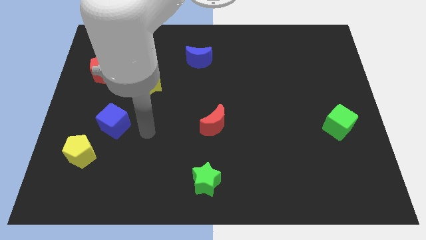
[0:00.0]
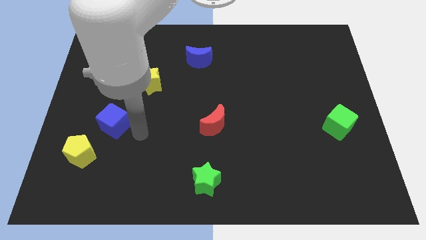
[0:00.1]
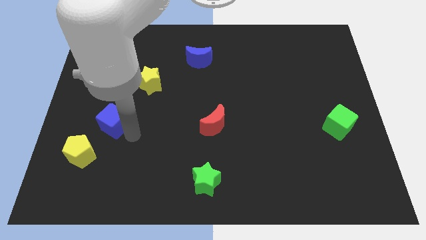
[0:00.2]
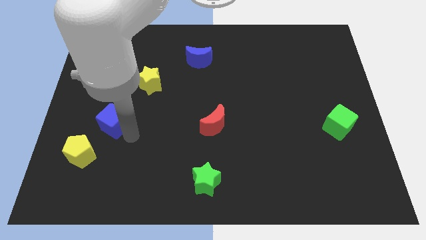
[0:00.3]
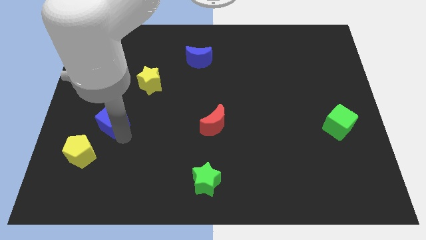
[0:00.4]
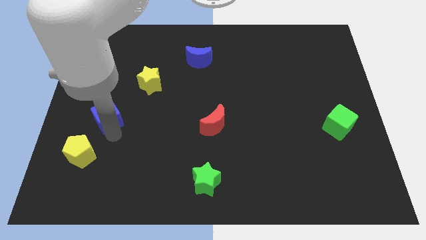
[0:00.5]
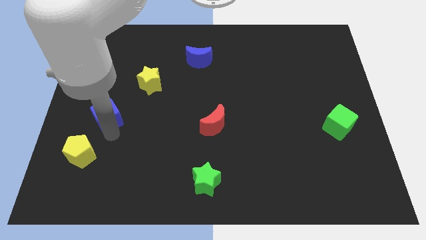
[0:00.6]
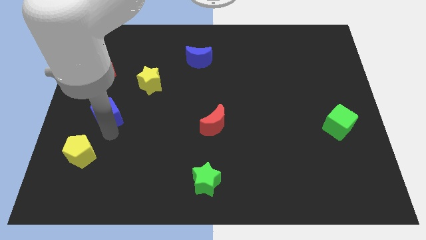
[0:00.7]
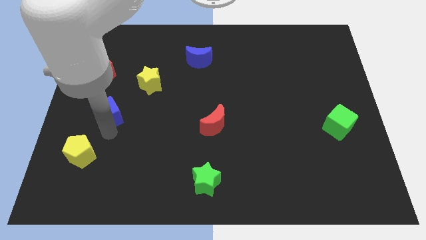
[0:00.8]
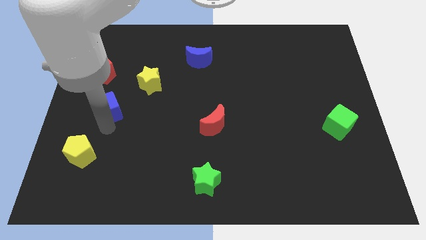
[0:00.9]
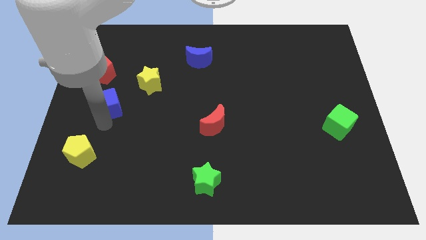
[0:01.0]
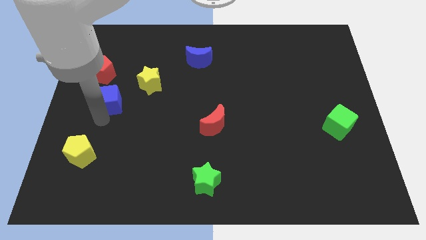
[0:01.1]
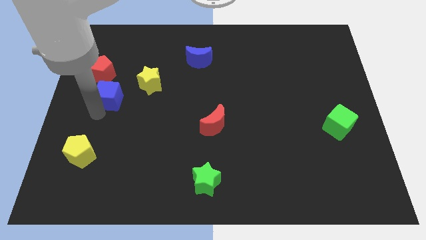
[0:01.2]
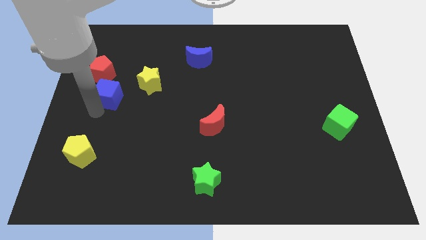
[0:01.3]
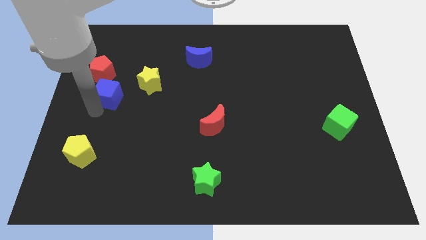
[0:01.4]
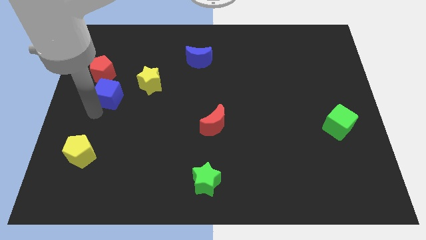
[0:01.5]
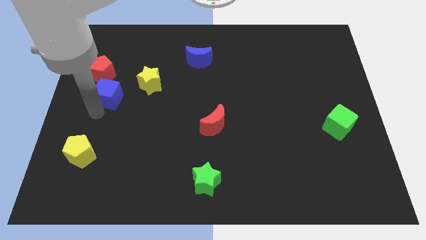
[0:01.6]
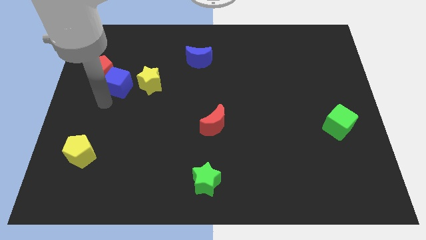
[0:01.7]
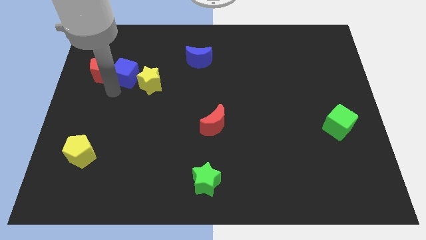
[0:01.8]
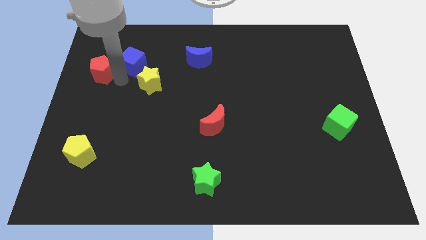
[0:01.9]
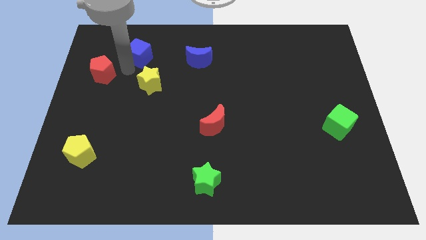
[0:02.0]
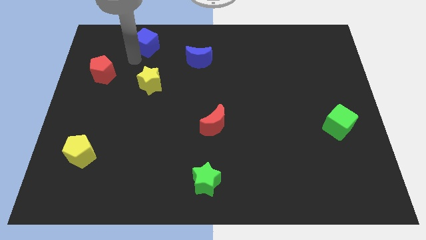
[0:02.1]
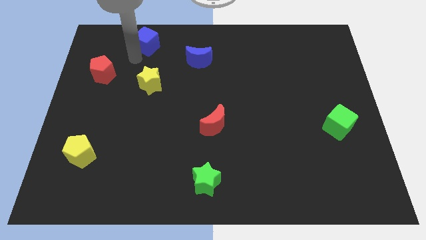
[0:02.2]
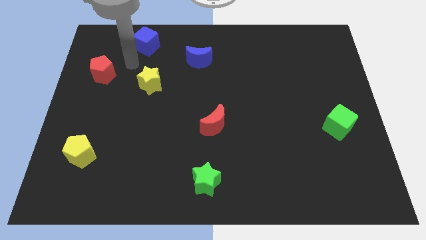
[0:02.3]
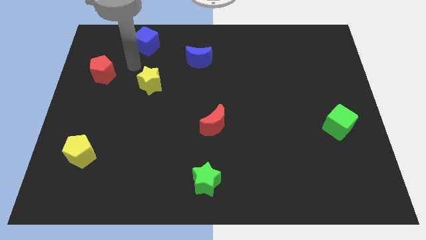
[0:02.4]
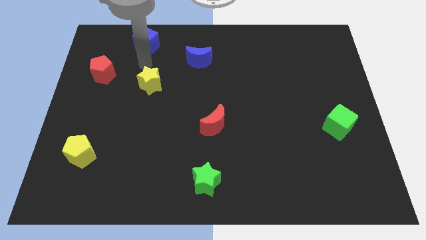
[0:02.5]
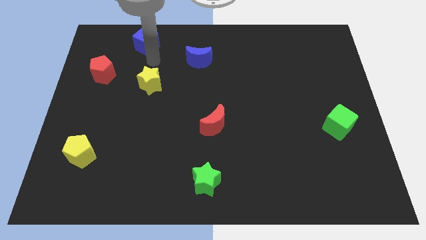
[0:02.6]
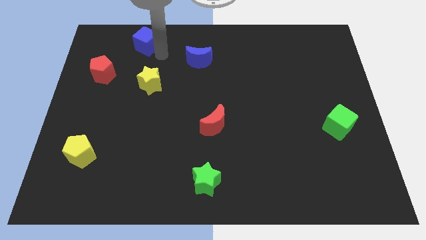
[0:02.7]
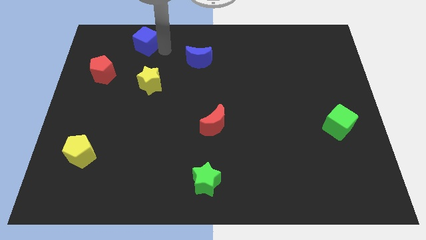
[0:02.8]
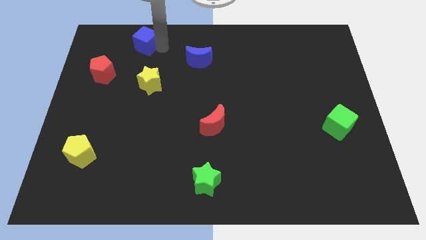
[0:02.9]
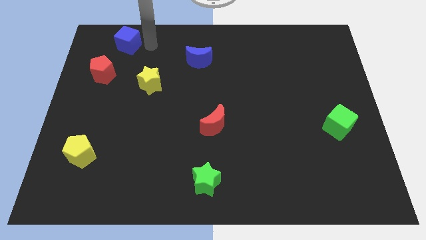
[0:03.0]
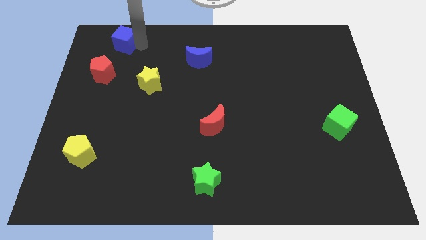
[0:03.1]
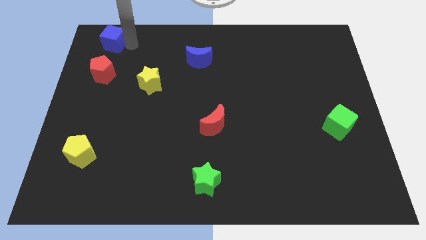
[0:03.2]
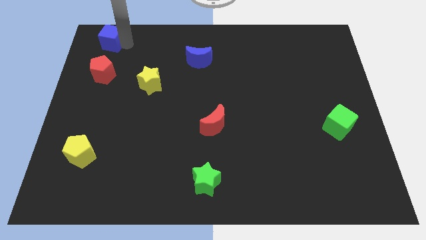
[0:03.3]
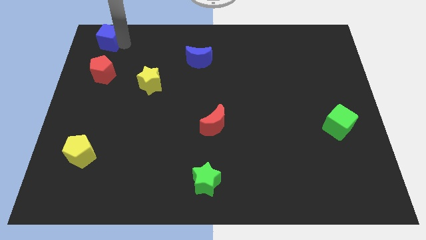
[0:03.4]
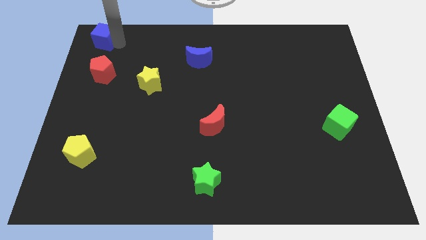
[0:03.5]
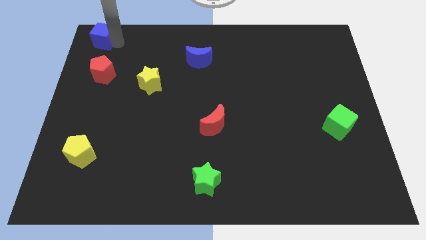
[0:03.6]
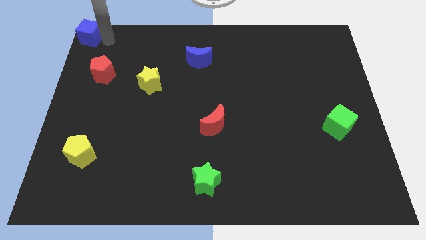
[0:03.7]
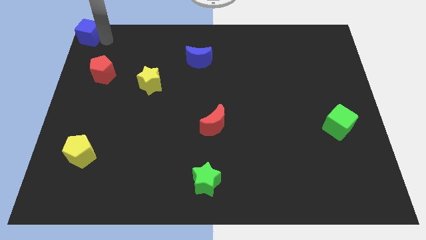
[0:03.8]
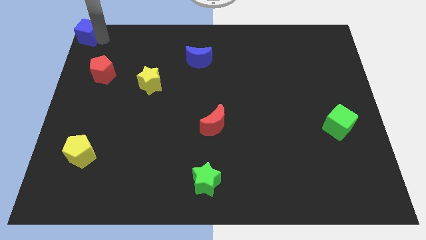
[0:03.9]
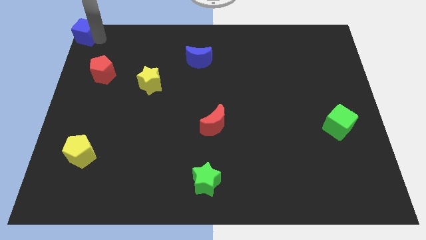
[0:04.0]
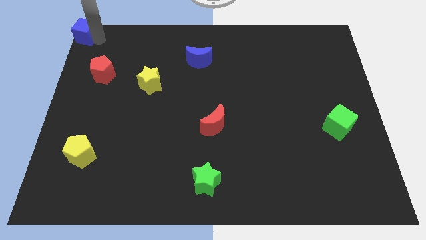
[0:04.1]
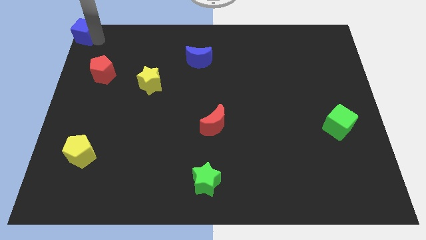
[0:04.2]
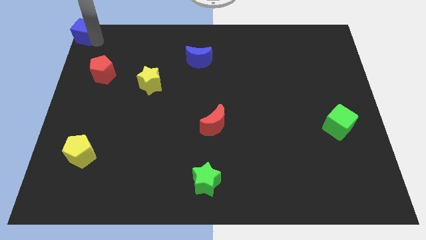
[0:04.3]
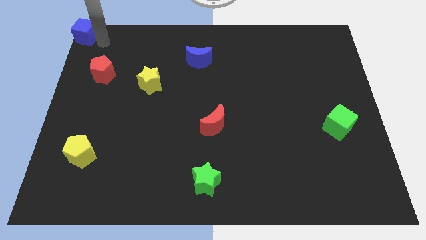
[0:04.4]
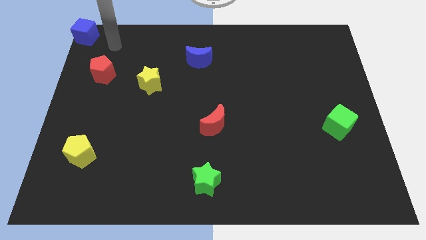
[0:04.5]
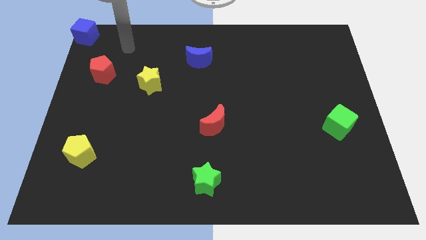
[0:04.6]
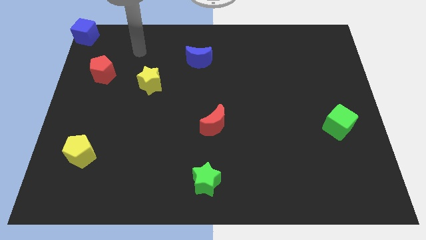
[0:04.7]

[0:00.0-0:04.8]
place the blue cube at the top left corner of the board

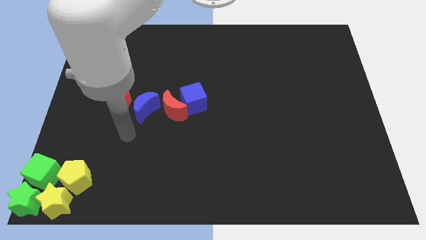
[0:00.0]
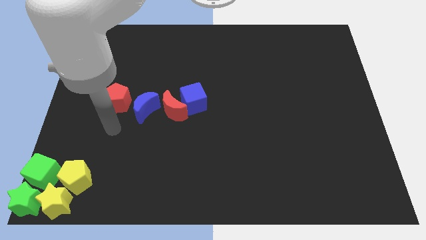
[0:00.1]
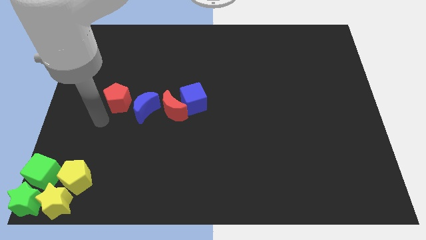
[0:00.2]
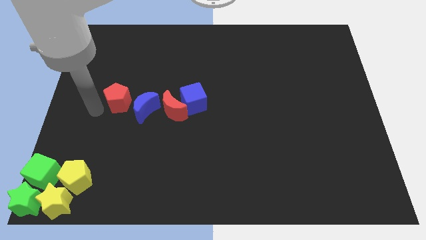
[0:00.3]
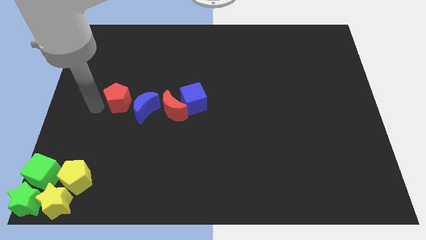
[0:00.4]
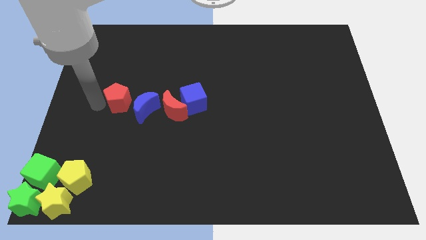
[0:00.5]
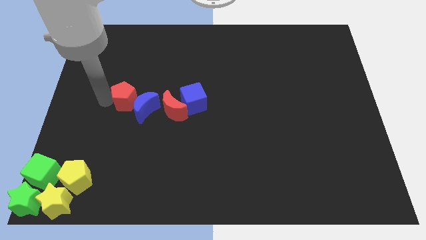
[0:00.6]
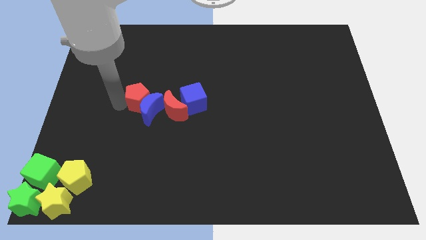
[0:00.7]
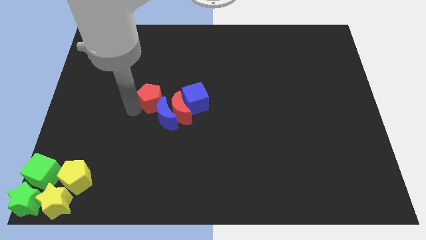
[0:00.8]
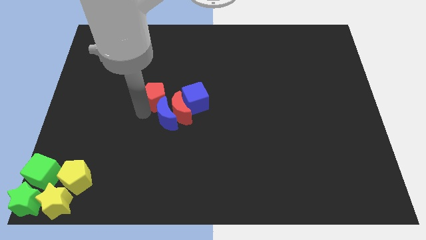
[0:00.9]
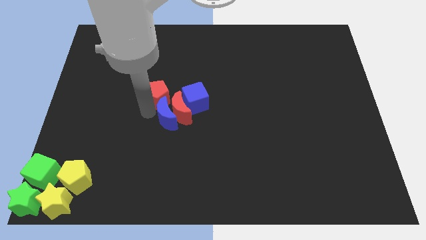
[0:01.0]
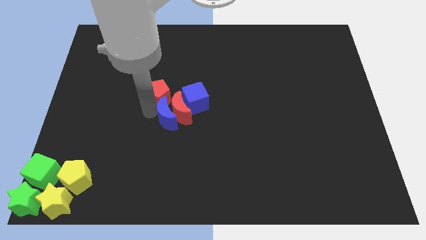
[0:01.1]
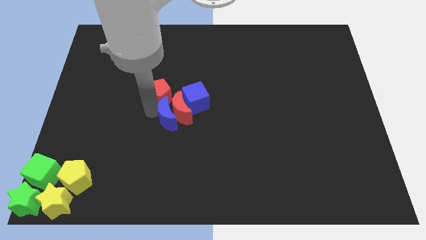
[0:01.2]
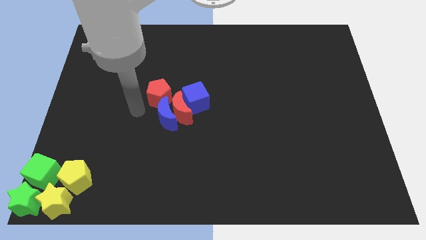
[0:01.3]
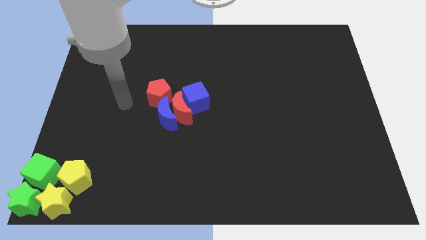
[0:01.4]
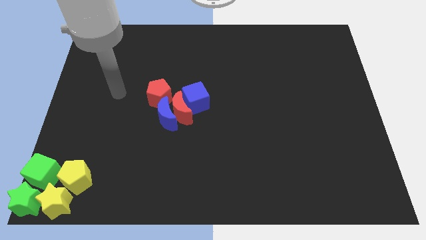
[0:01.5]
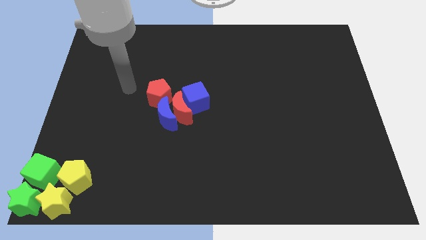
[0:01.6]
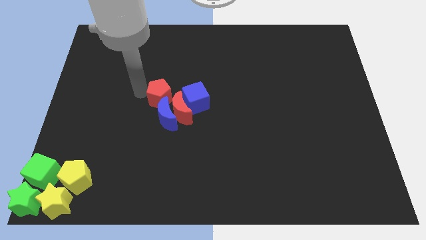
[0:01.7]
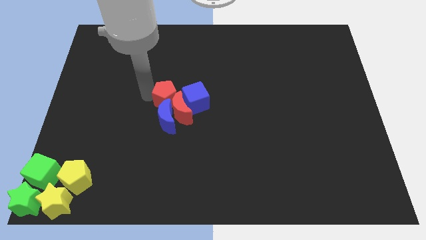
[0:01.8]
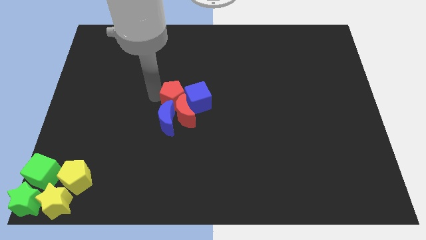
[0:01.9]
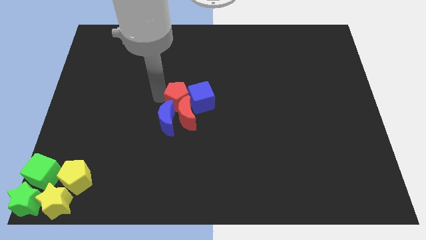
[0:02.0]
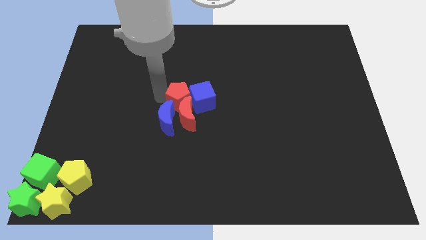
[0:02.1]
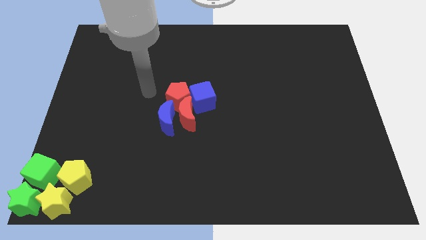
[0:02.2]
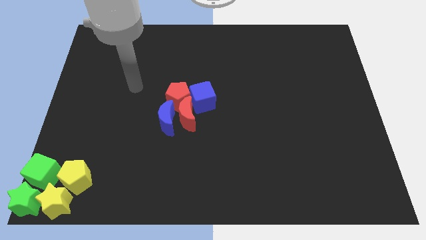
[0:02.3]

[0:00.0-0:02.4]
place the red pentagon at the top of the red crescent

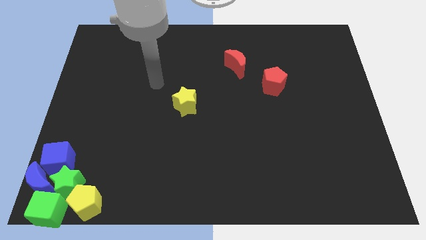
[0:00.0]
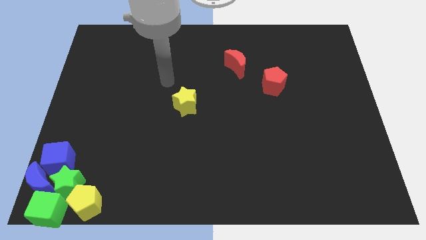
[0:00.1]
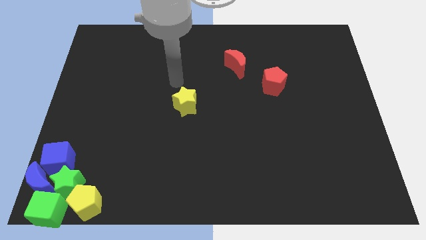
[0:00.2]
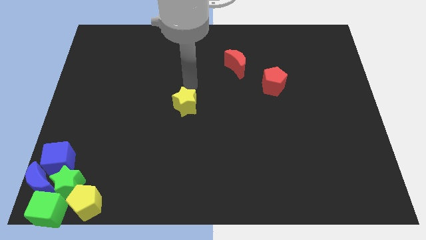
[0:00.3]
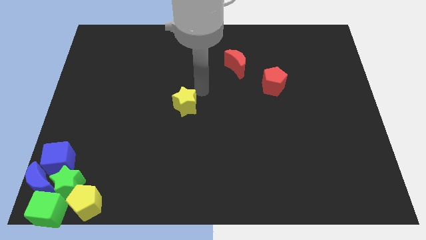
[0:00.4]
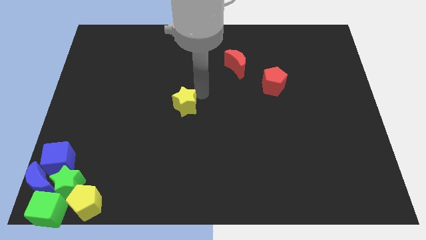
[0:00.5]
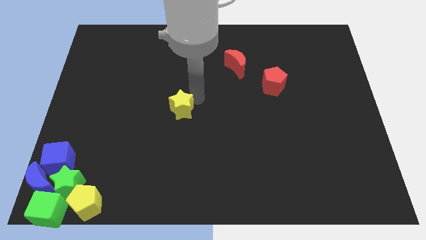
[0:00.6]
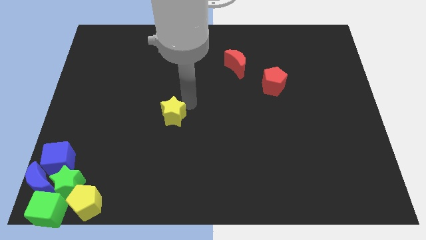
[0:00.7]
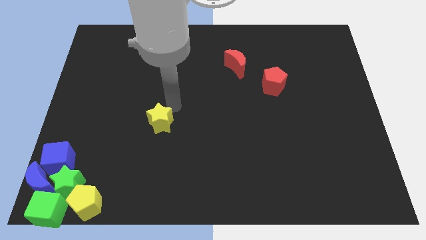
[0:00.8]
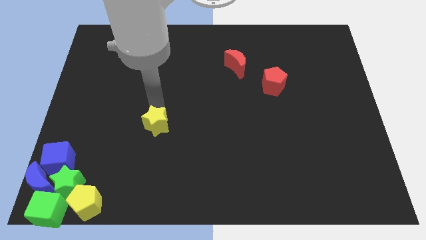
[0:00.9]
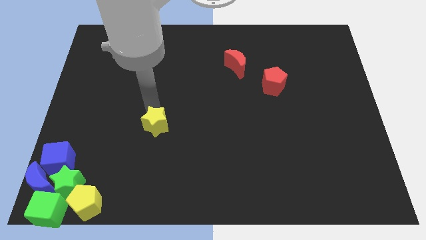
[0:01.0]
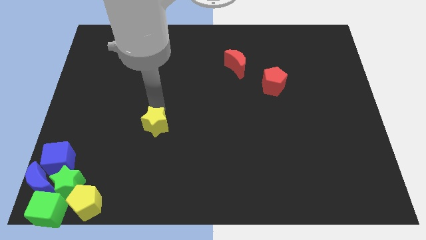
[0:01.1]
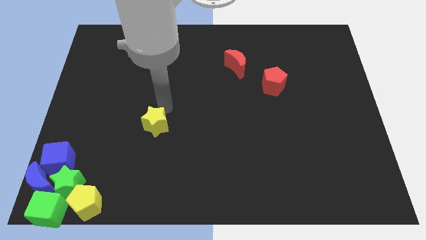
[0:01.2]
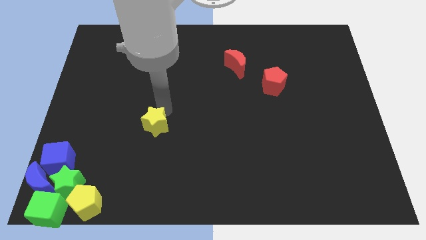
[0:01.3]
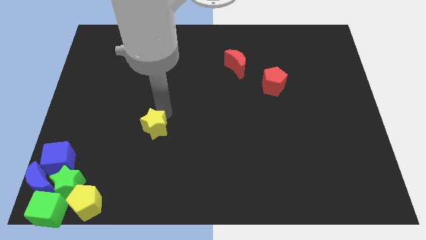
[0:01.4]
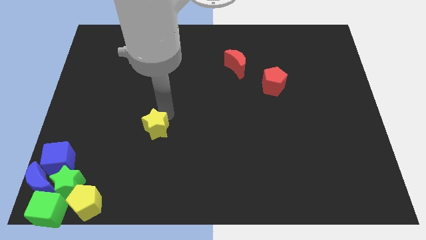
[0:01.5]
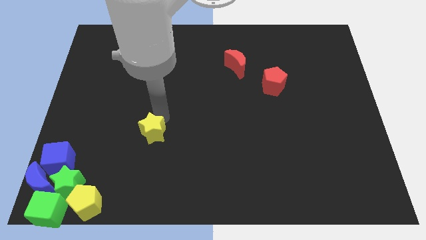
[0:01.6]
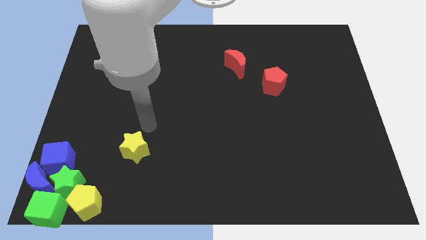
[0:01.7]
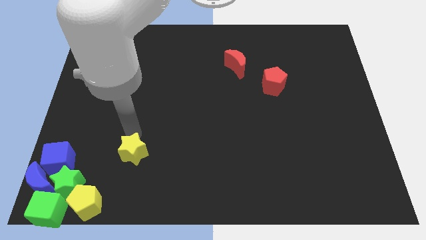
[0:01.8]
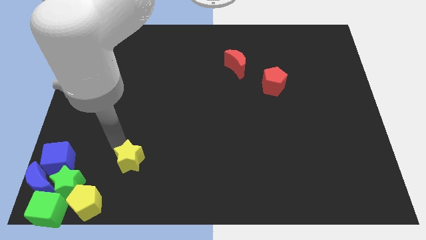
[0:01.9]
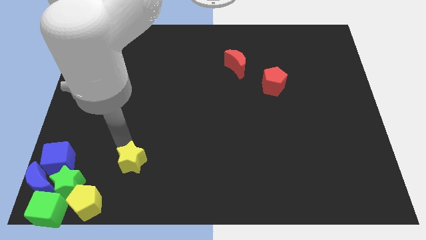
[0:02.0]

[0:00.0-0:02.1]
drag the yellow star towards the group of blocks at the bottom left corner of the board
